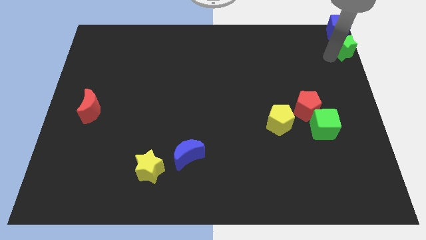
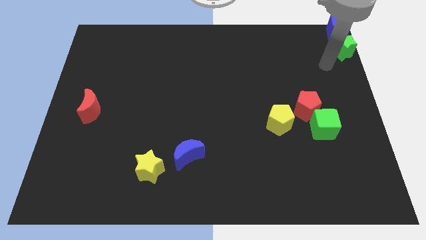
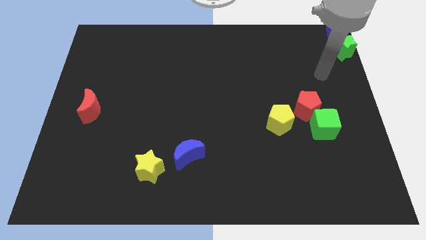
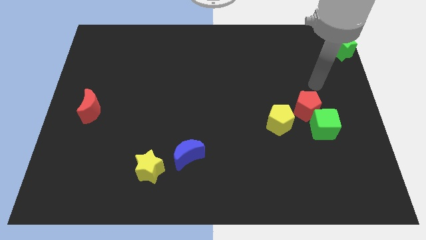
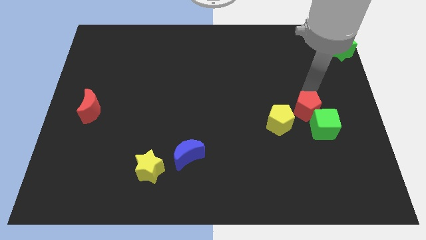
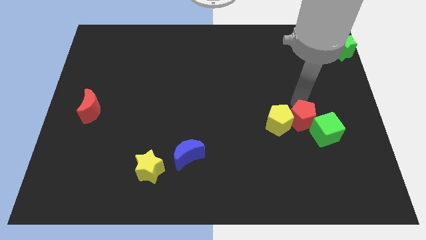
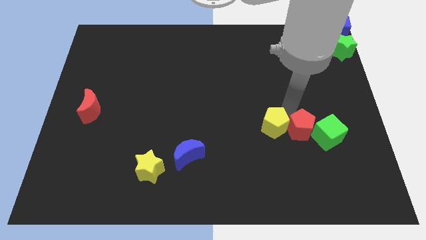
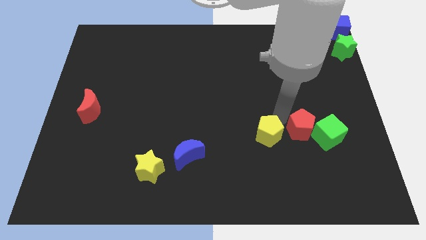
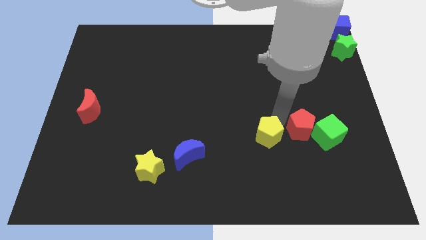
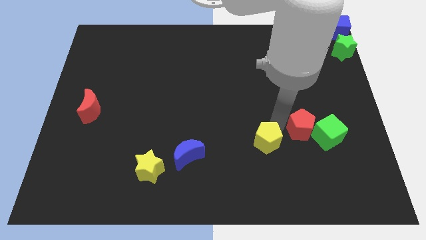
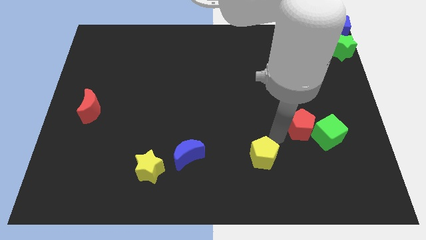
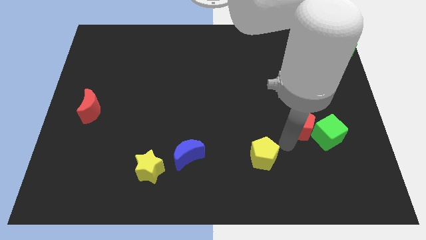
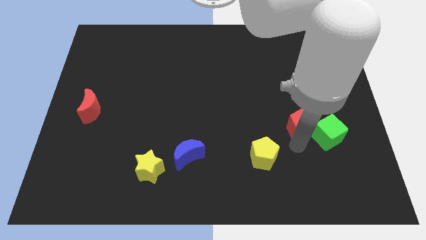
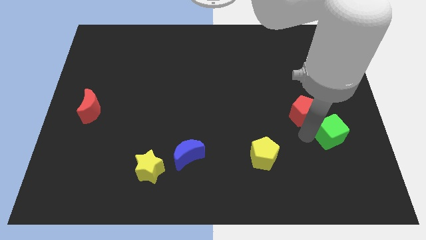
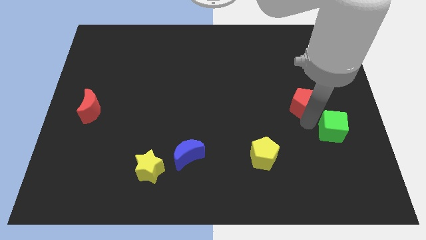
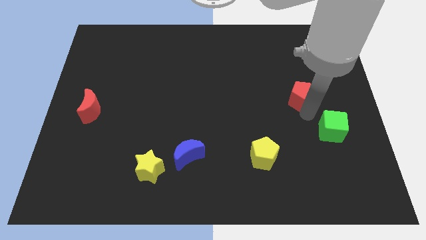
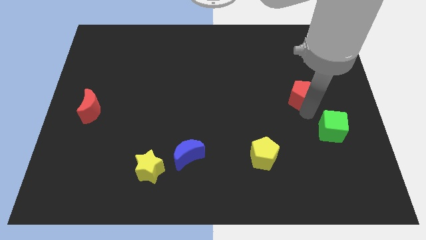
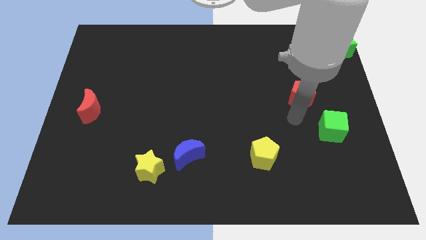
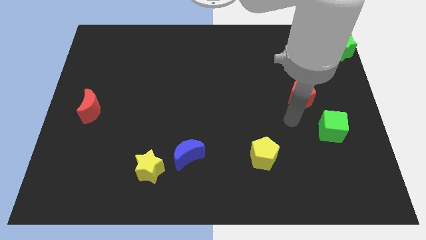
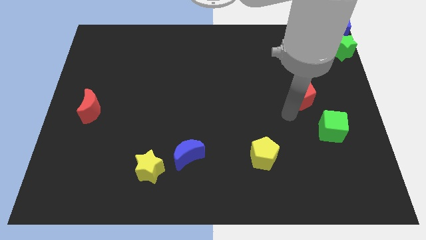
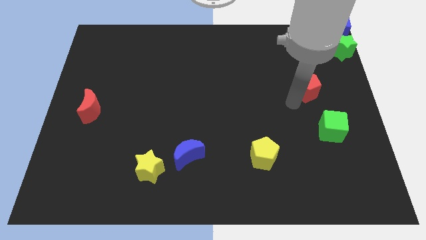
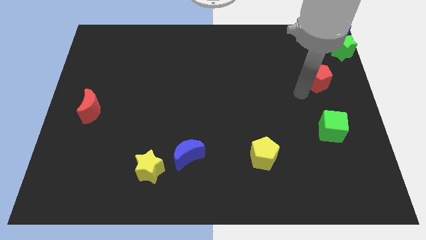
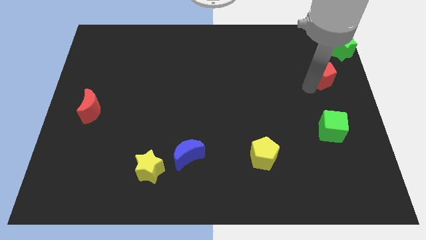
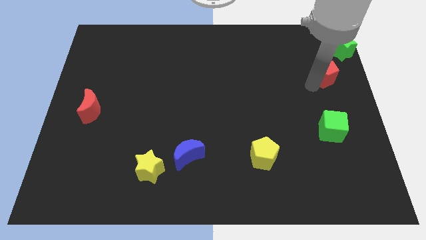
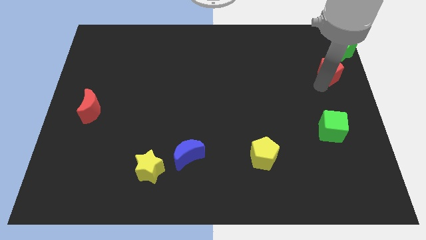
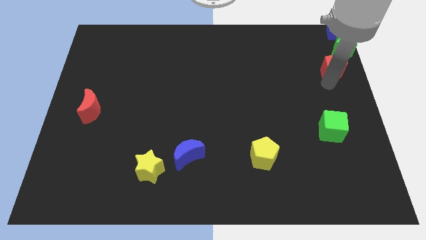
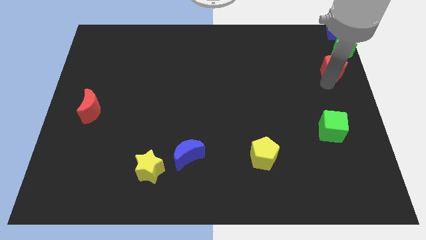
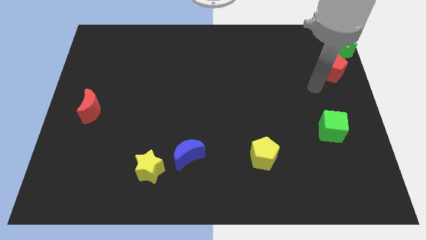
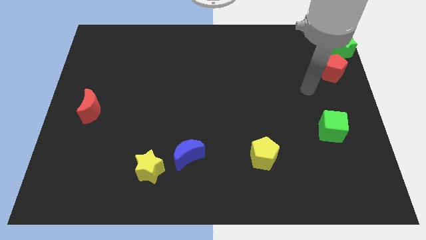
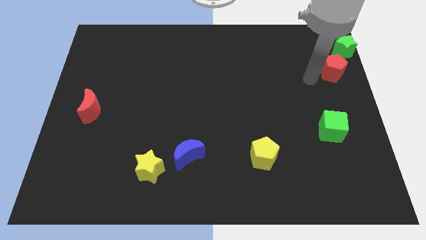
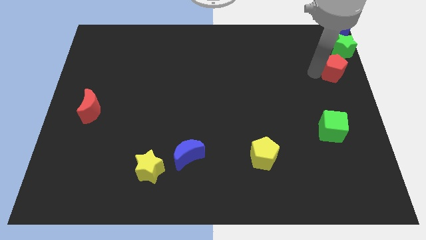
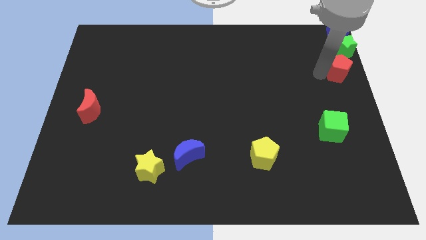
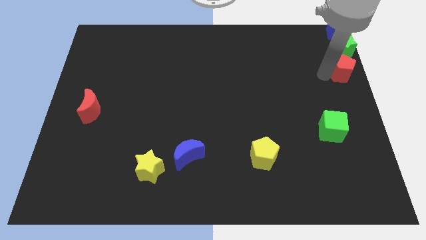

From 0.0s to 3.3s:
push the red pentagon towards the green star

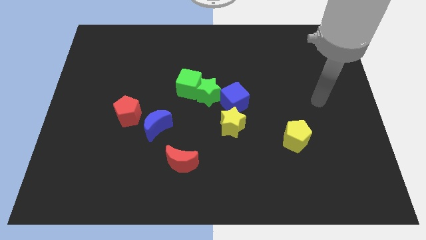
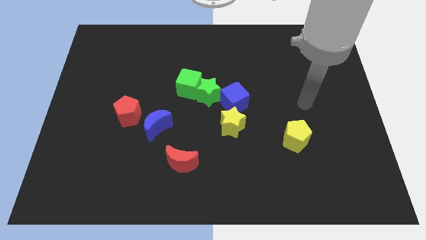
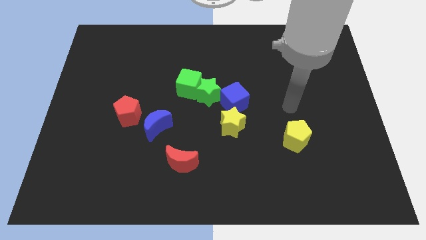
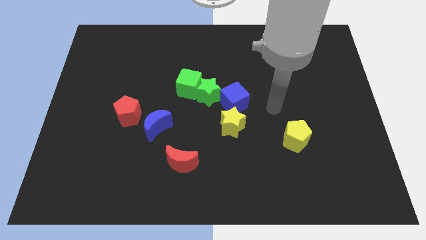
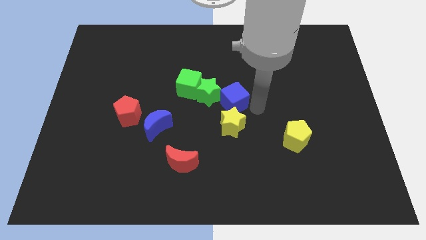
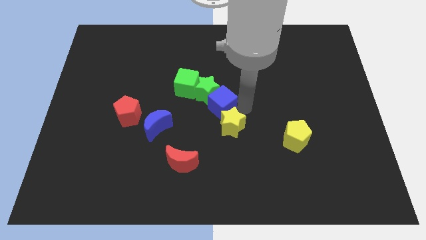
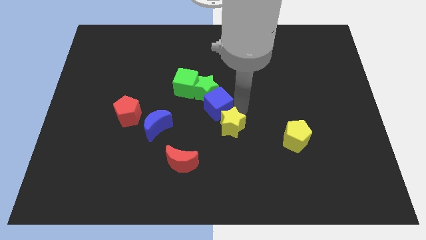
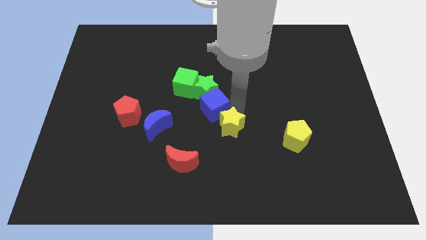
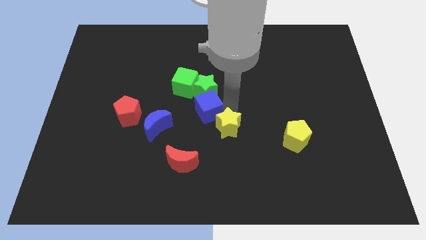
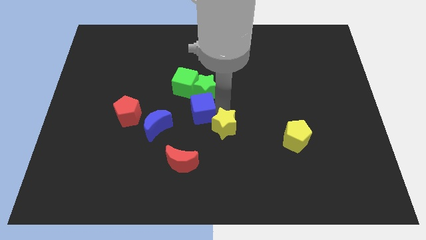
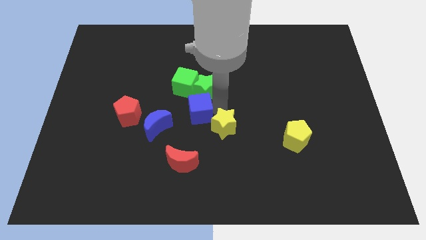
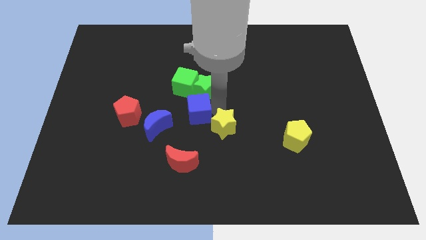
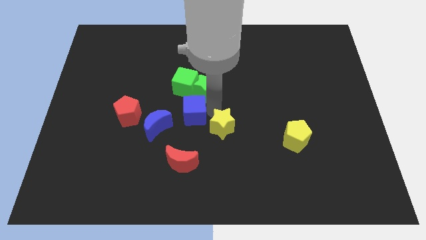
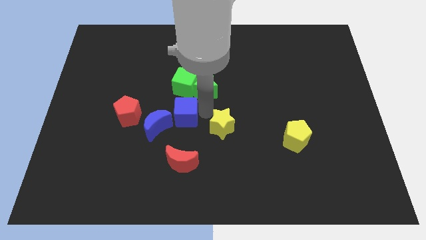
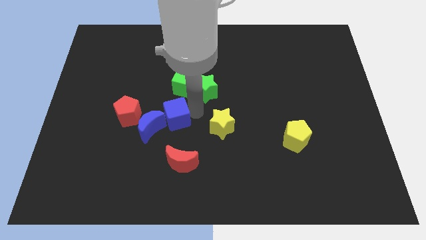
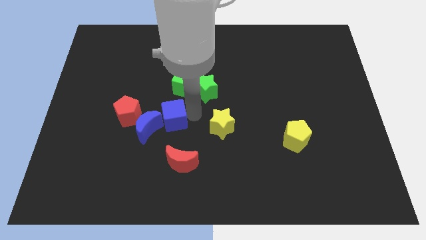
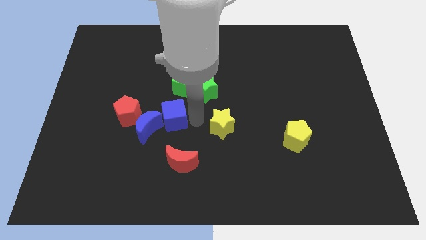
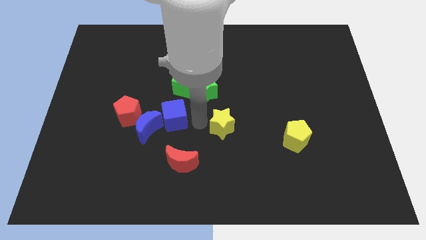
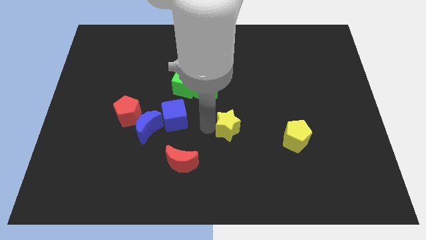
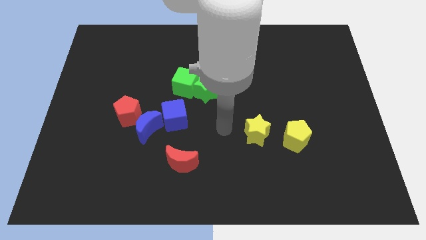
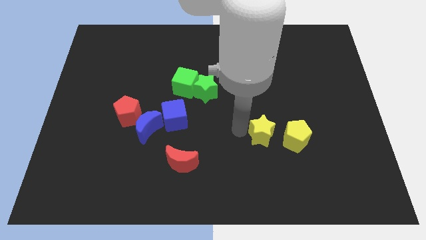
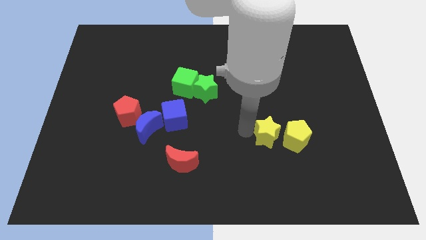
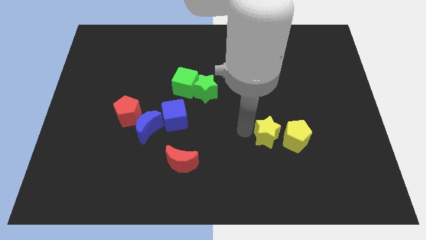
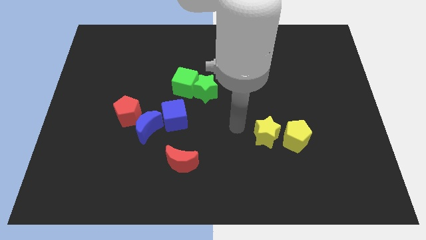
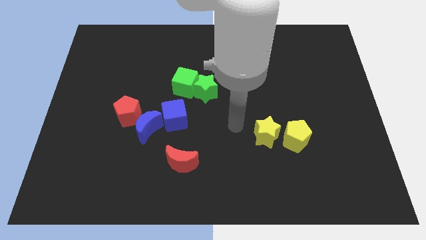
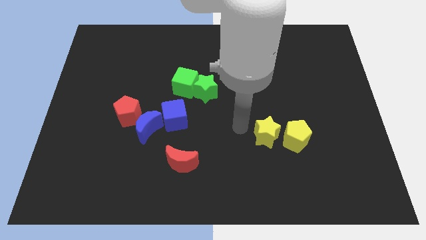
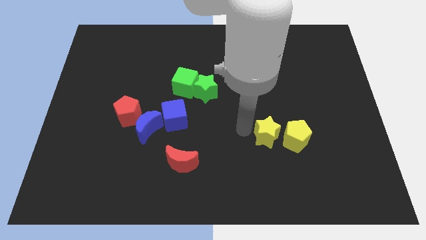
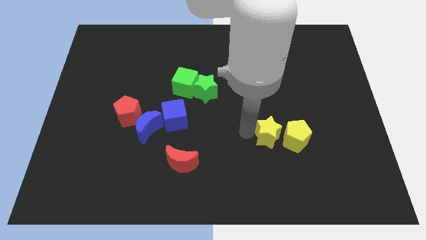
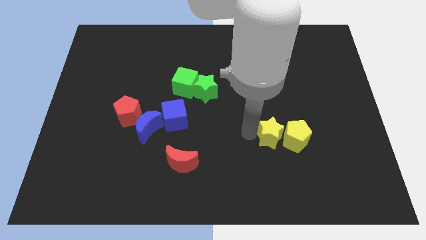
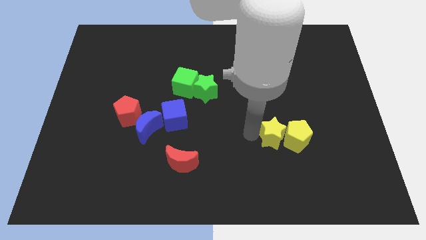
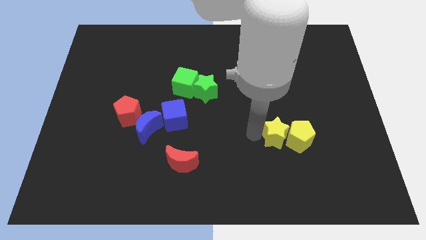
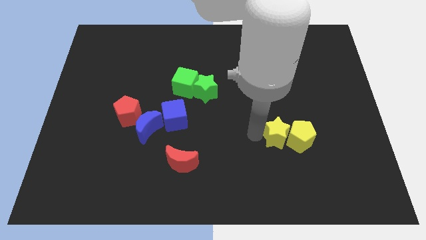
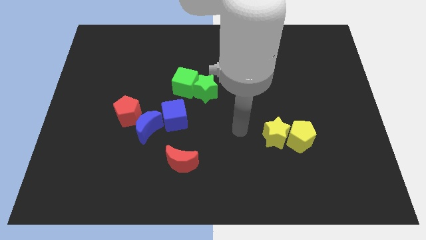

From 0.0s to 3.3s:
push the blue cube into the blue moon

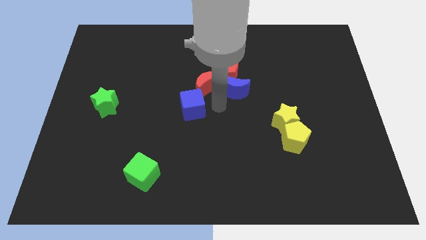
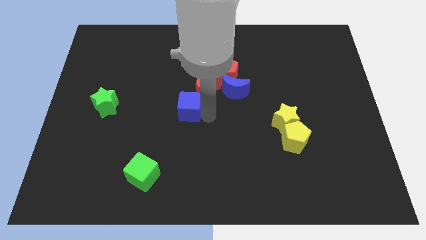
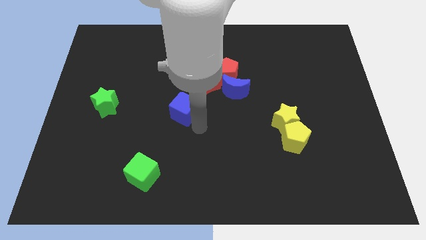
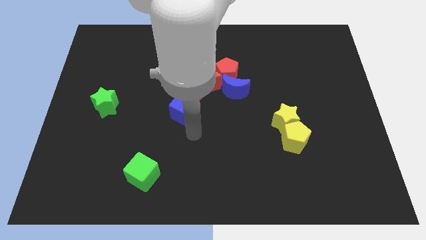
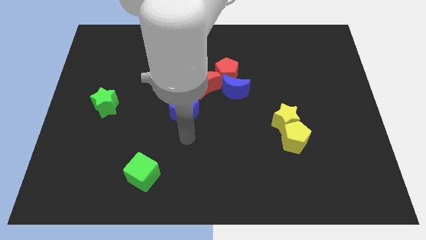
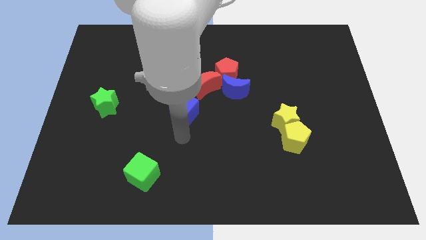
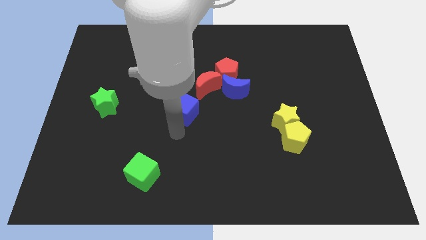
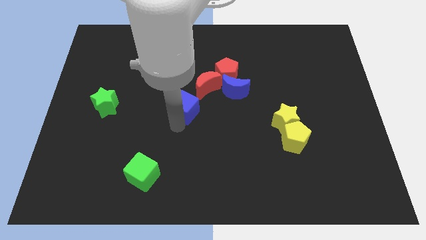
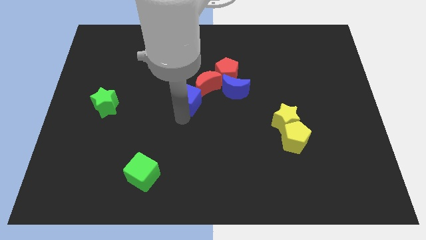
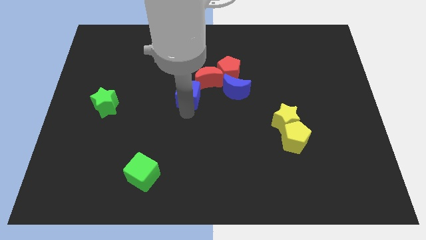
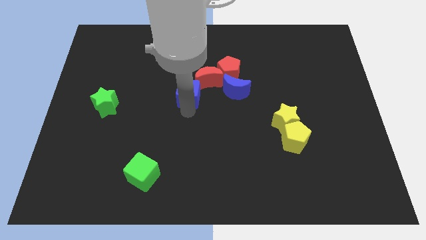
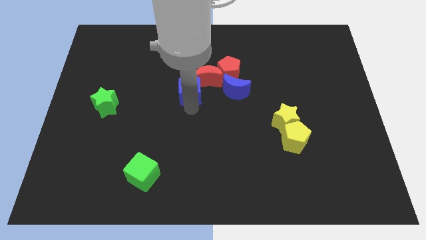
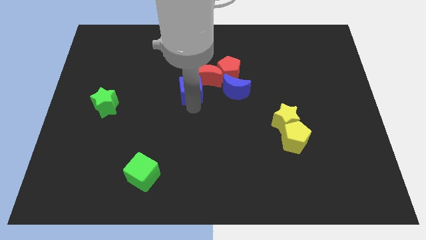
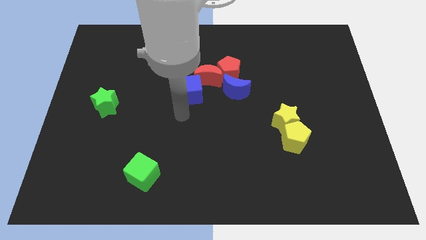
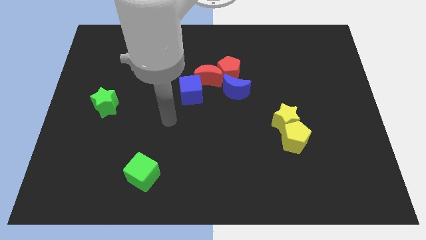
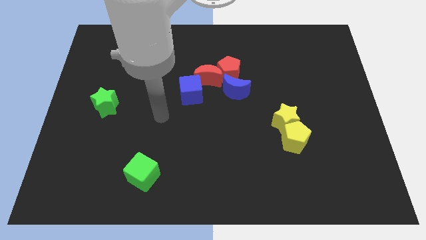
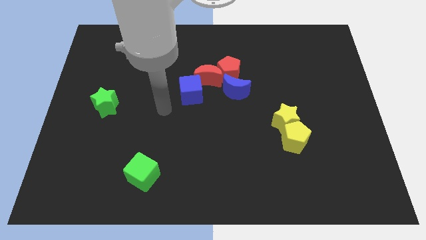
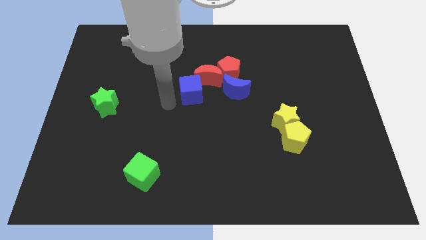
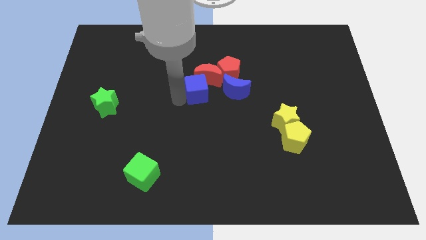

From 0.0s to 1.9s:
push the blue cube into the red moon

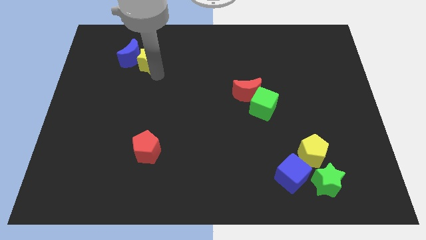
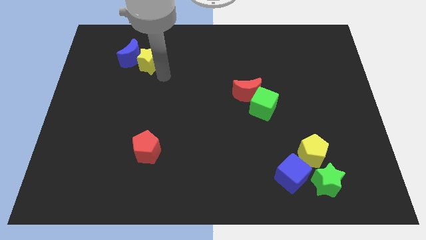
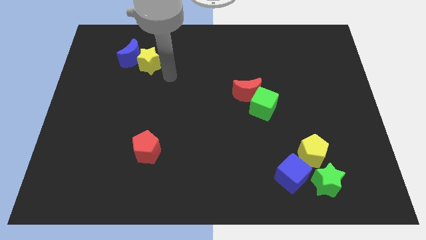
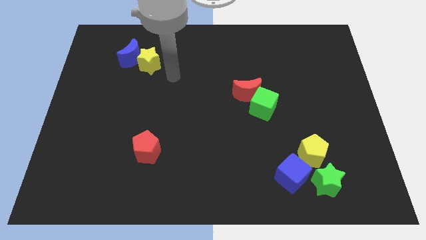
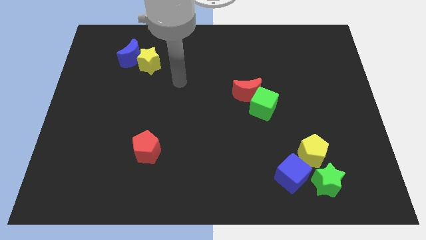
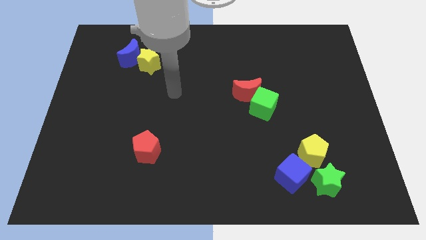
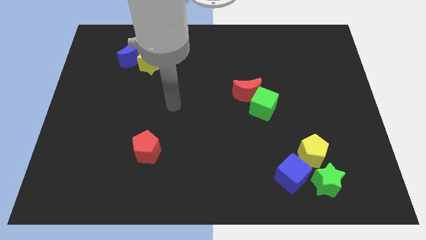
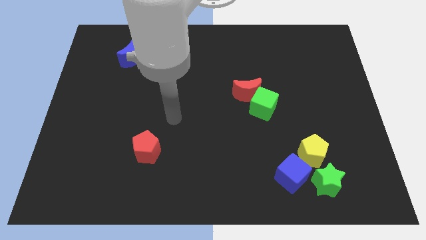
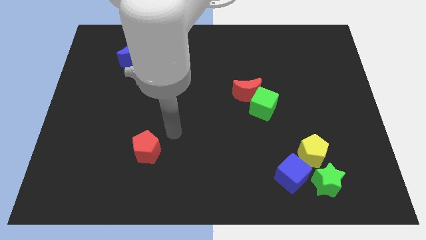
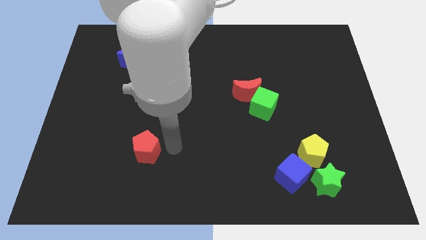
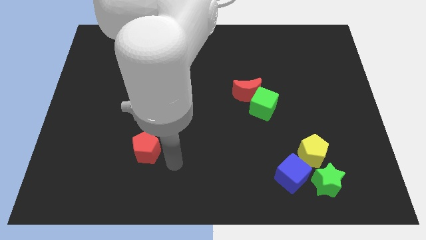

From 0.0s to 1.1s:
move the arm away from the yellow star
